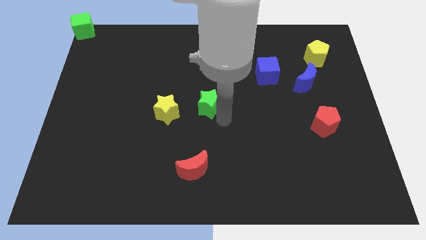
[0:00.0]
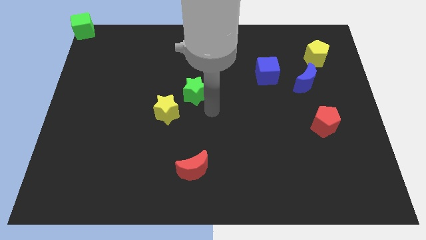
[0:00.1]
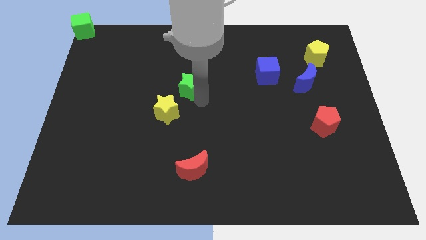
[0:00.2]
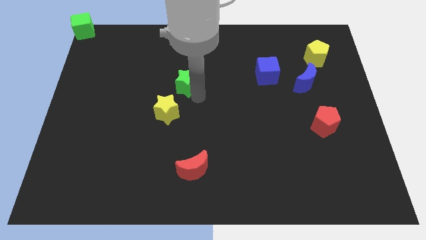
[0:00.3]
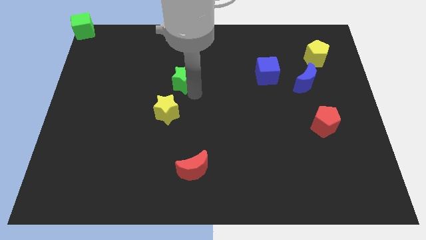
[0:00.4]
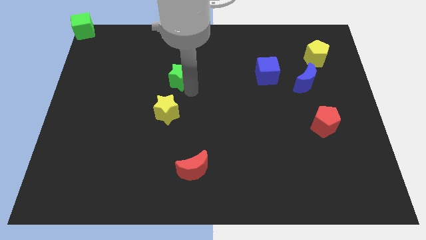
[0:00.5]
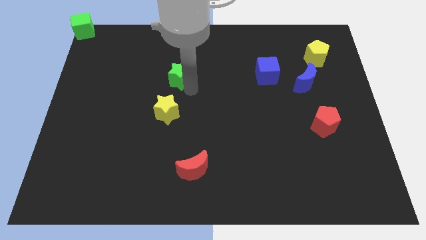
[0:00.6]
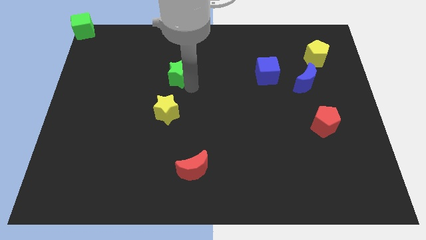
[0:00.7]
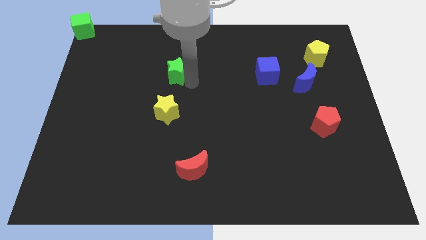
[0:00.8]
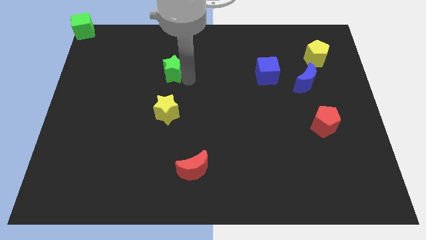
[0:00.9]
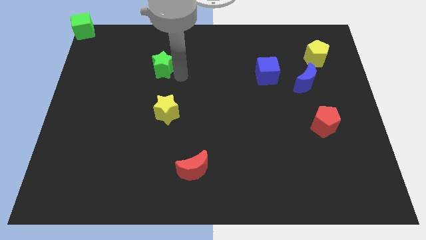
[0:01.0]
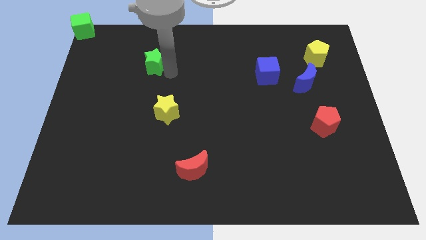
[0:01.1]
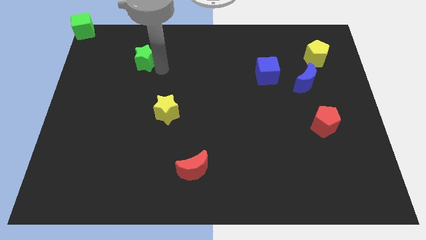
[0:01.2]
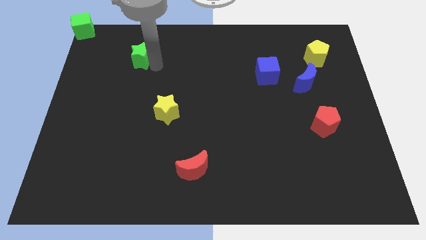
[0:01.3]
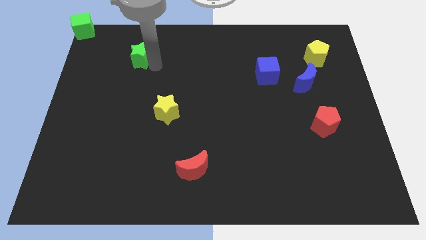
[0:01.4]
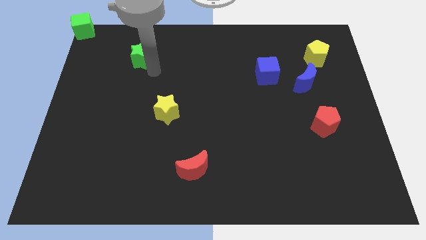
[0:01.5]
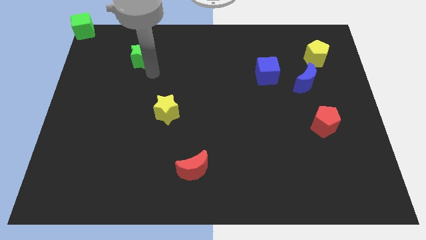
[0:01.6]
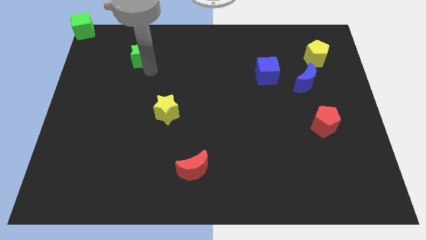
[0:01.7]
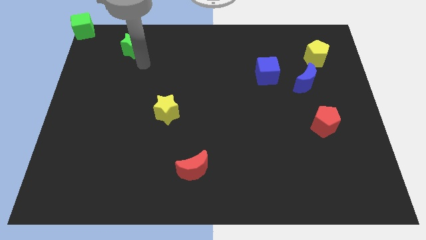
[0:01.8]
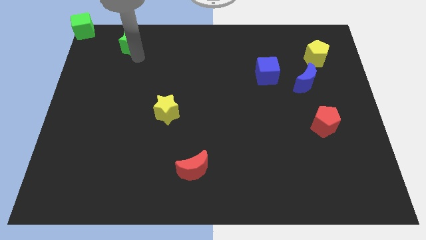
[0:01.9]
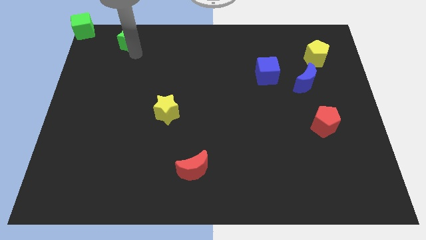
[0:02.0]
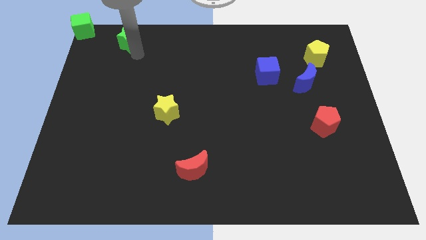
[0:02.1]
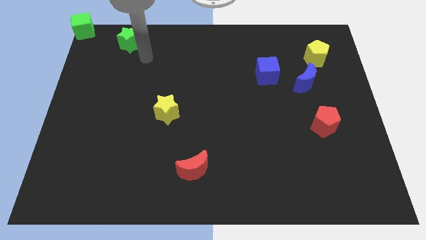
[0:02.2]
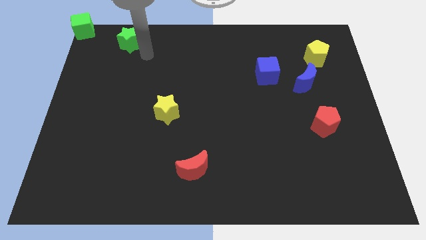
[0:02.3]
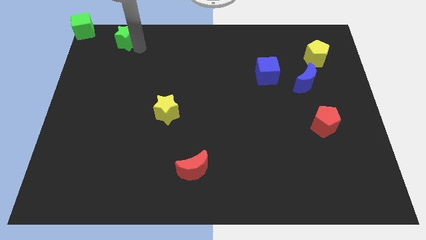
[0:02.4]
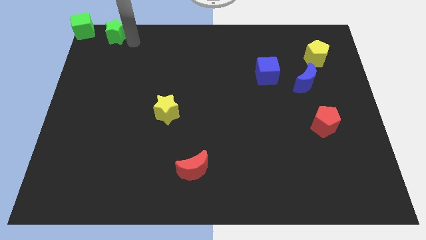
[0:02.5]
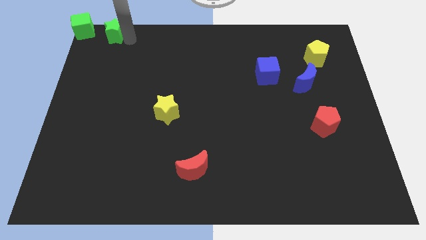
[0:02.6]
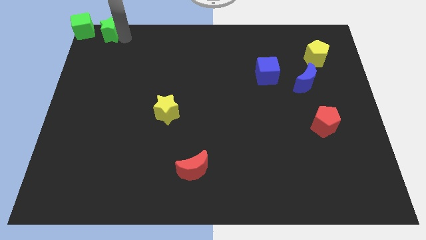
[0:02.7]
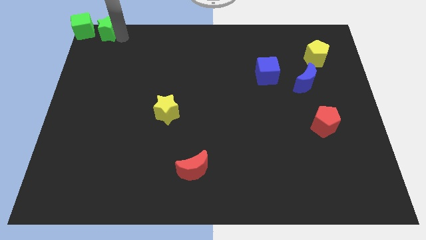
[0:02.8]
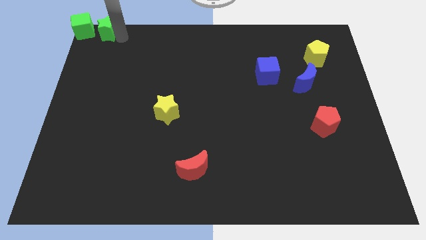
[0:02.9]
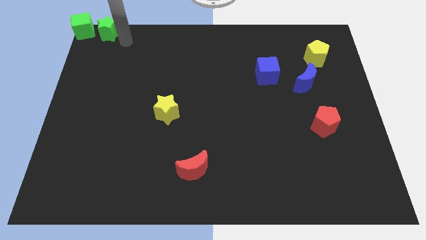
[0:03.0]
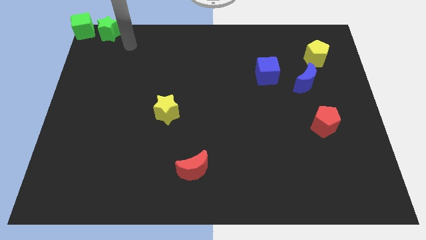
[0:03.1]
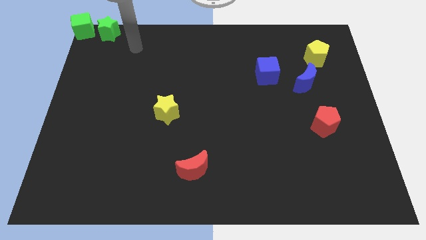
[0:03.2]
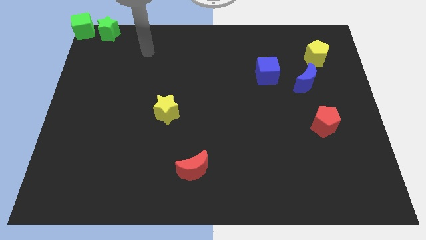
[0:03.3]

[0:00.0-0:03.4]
drag the green star to the right of the green cube

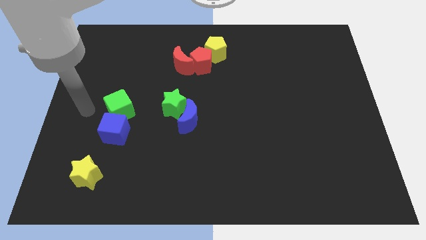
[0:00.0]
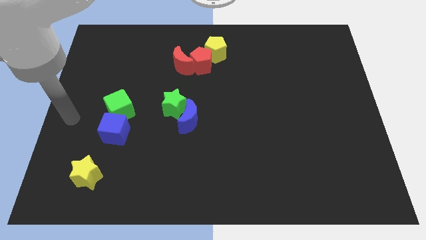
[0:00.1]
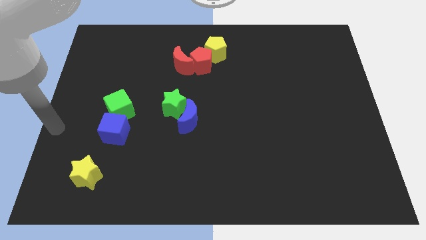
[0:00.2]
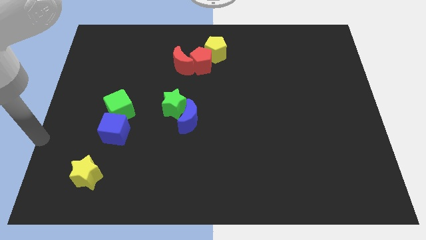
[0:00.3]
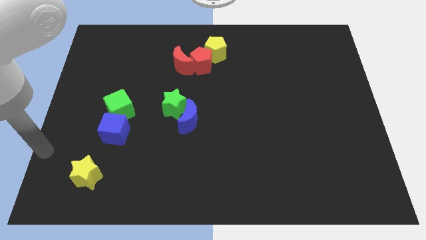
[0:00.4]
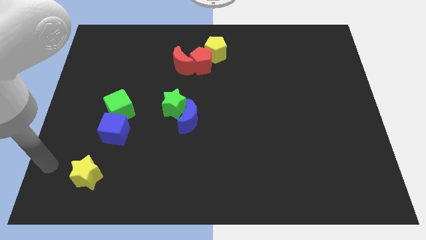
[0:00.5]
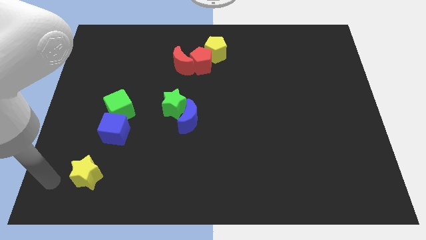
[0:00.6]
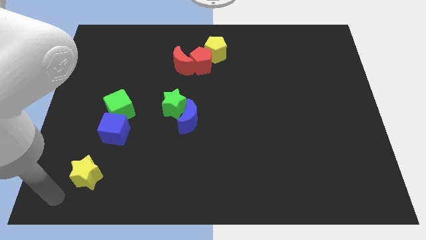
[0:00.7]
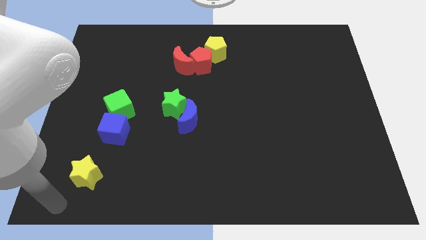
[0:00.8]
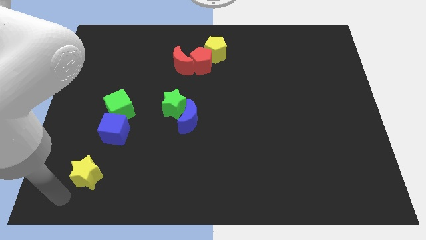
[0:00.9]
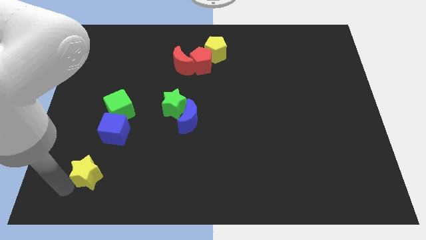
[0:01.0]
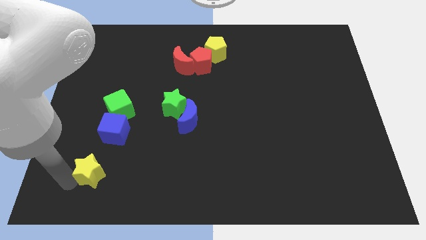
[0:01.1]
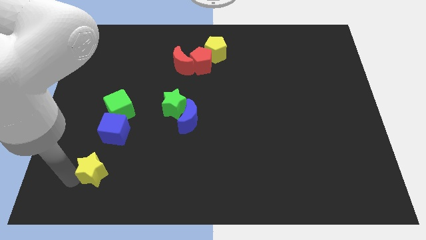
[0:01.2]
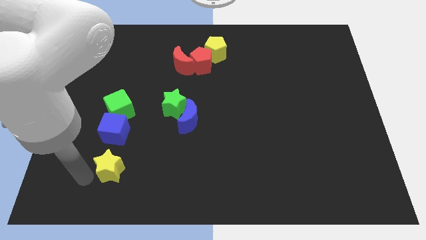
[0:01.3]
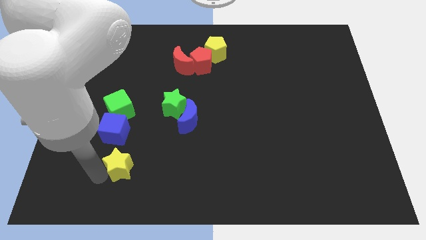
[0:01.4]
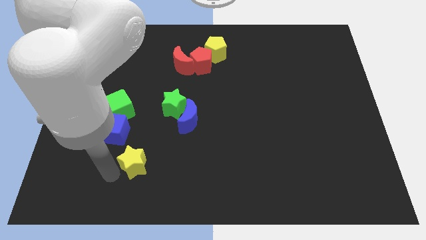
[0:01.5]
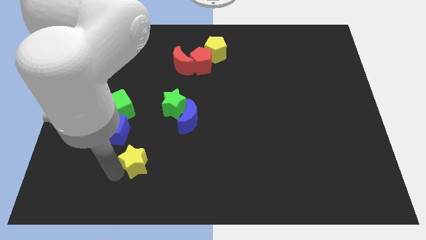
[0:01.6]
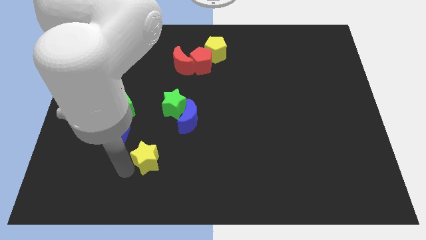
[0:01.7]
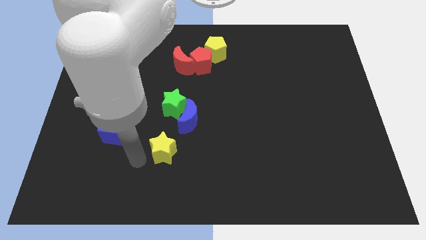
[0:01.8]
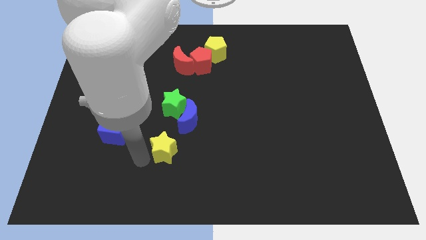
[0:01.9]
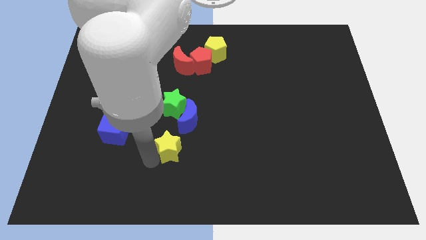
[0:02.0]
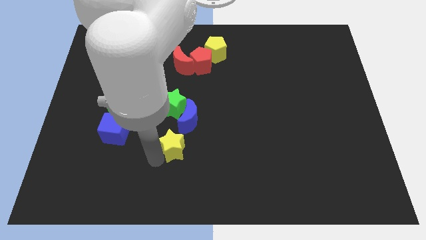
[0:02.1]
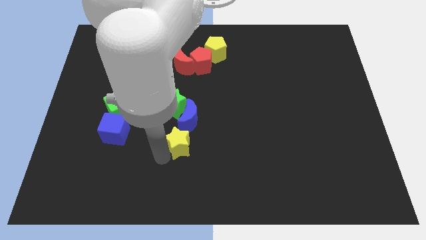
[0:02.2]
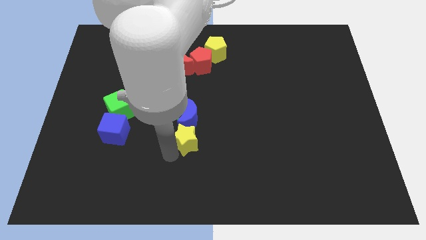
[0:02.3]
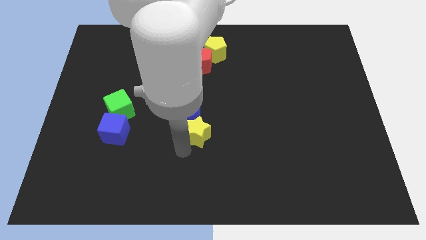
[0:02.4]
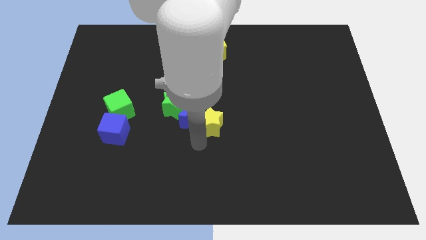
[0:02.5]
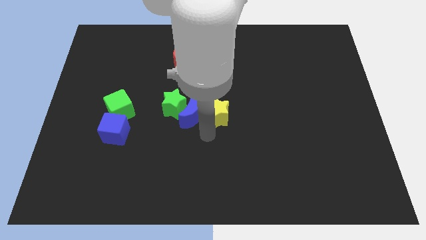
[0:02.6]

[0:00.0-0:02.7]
push the yellow star to the right of the blue crescent

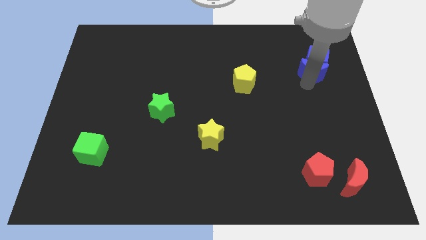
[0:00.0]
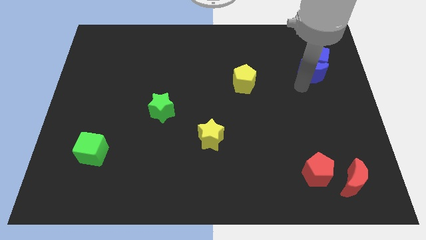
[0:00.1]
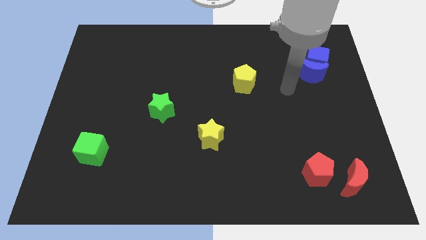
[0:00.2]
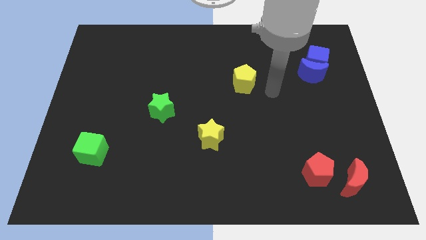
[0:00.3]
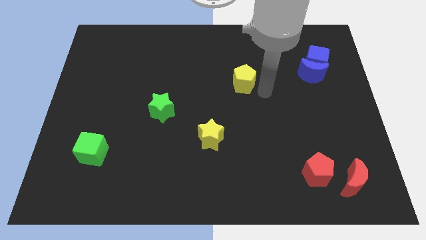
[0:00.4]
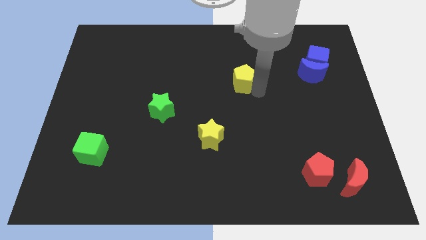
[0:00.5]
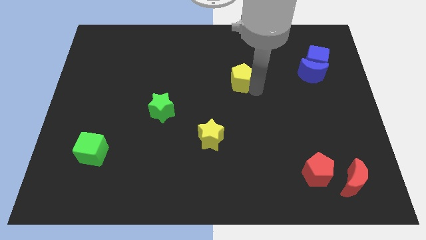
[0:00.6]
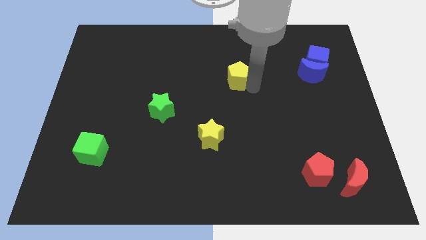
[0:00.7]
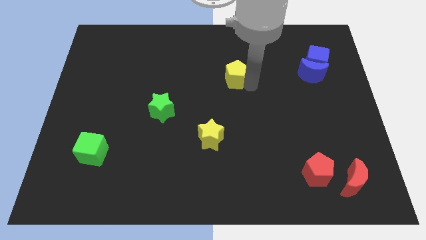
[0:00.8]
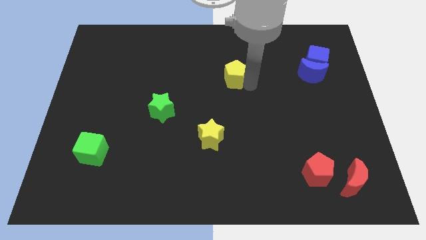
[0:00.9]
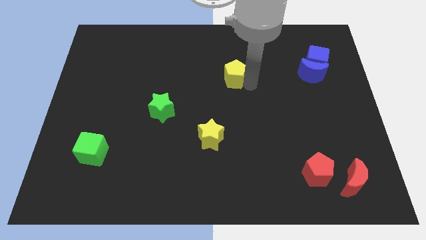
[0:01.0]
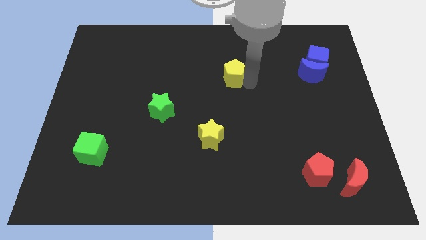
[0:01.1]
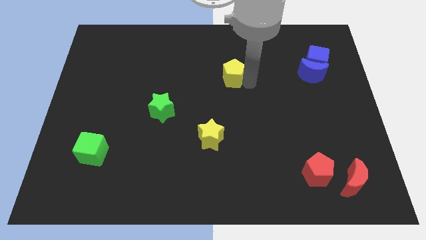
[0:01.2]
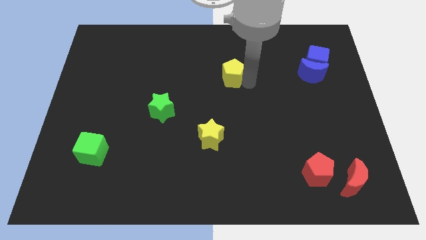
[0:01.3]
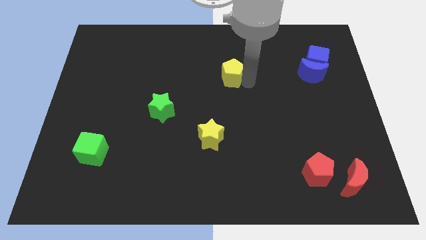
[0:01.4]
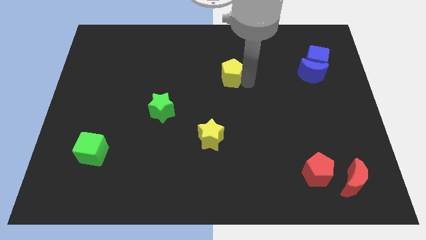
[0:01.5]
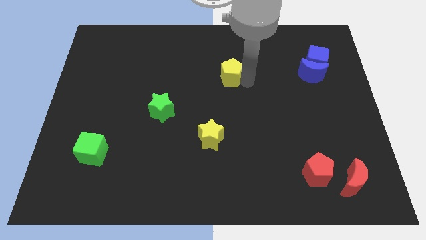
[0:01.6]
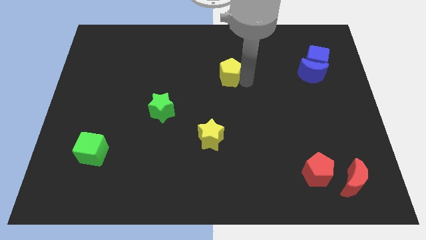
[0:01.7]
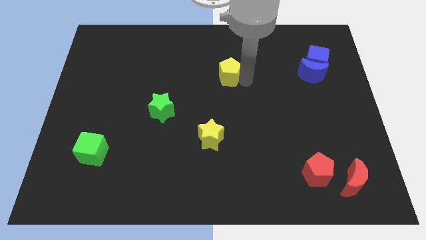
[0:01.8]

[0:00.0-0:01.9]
slide the yellow pentagon slightly to the left

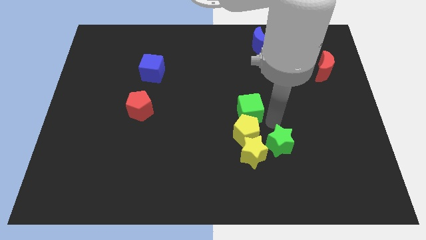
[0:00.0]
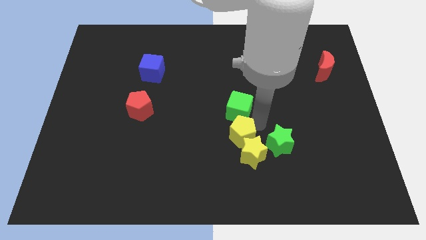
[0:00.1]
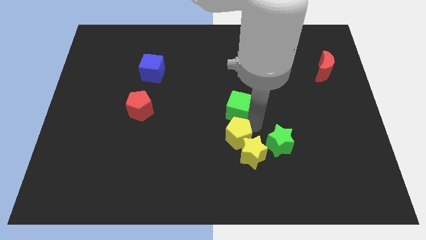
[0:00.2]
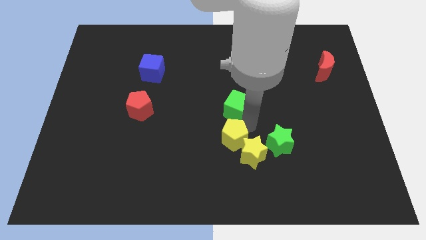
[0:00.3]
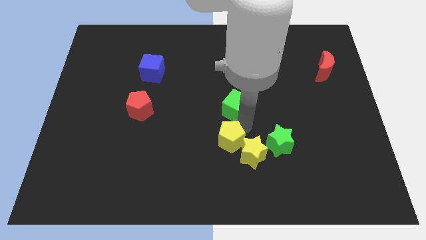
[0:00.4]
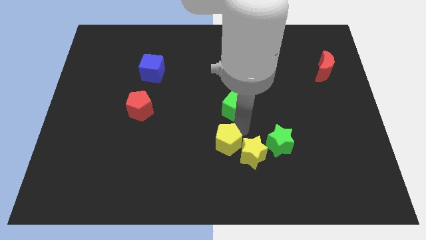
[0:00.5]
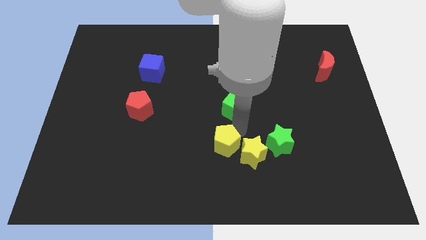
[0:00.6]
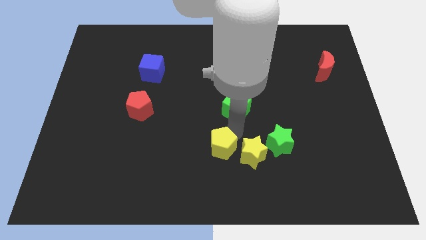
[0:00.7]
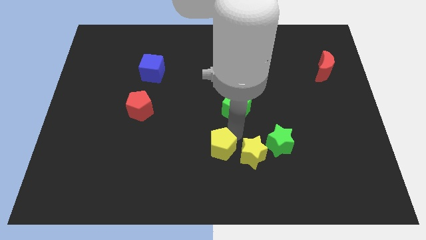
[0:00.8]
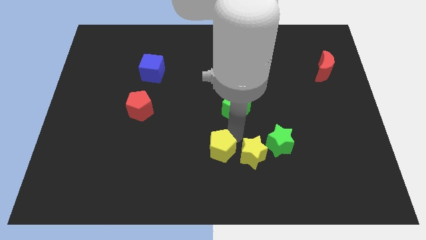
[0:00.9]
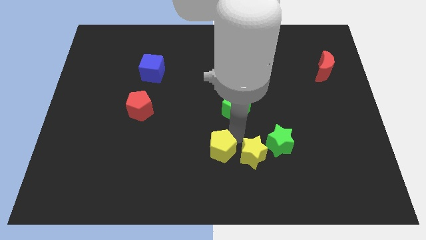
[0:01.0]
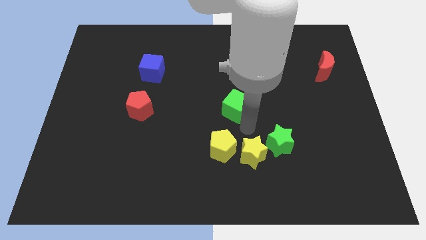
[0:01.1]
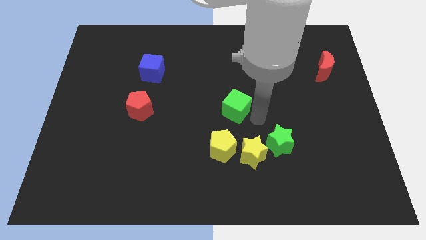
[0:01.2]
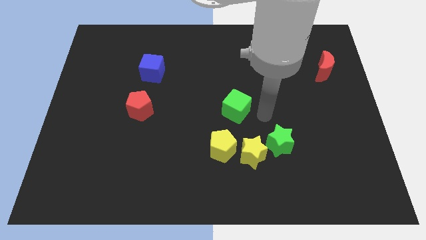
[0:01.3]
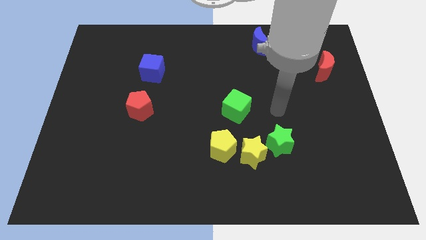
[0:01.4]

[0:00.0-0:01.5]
move the yellow pentagon to the left of yellow star
